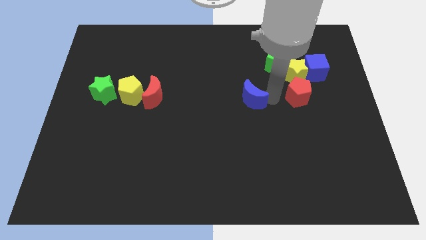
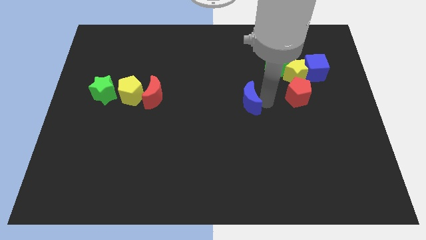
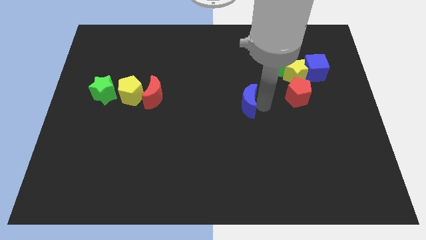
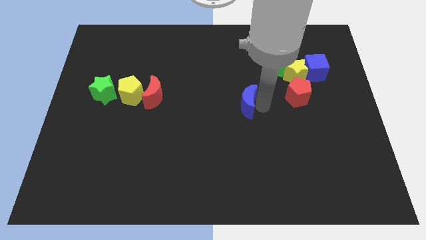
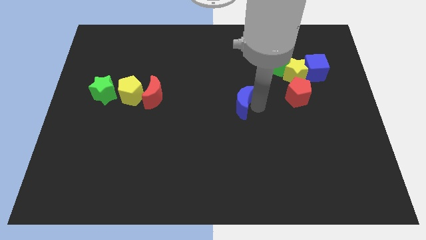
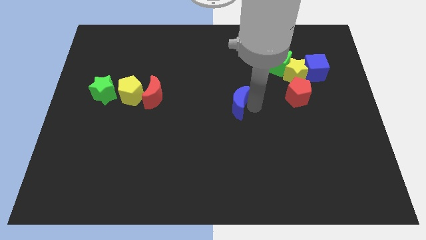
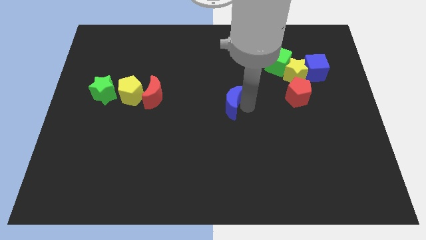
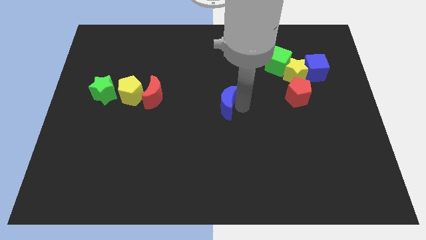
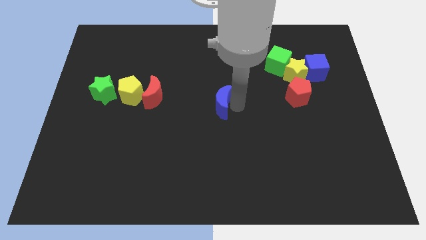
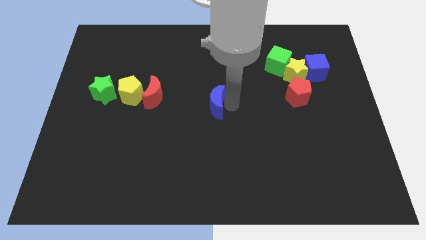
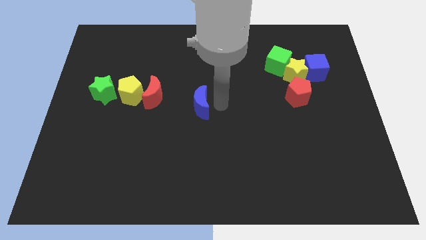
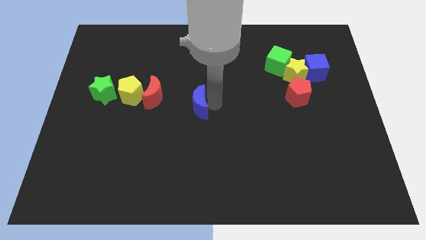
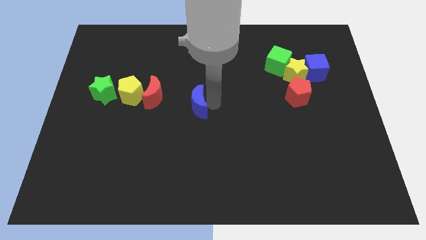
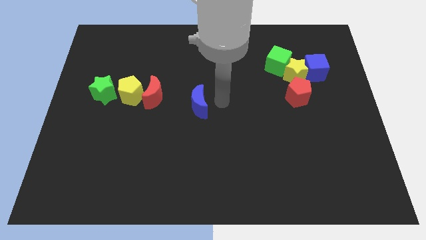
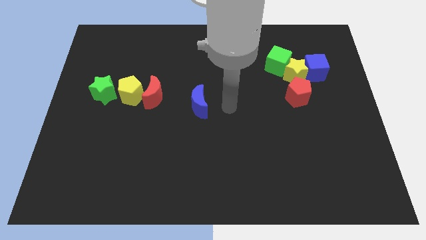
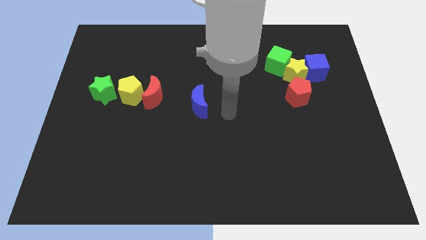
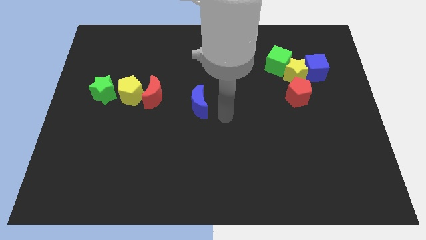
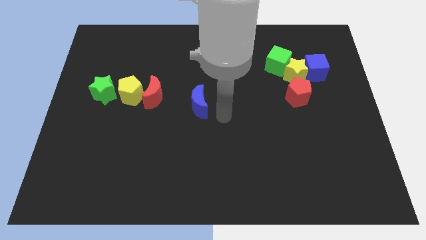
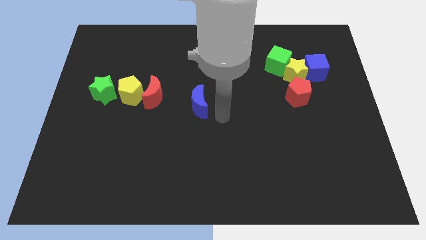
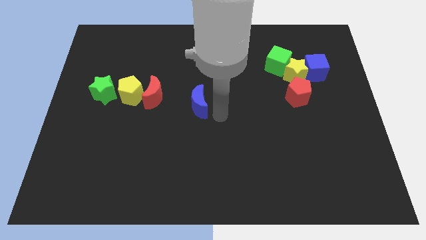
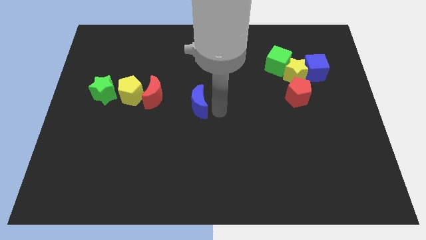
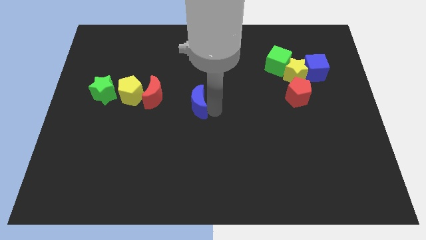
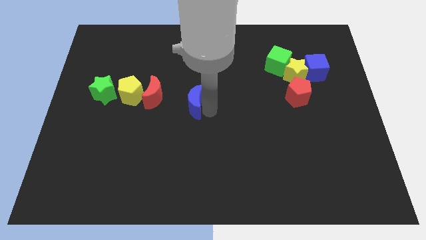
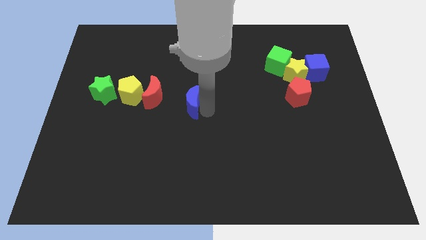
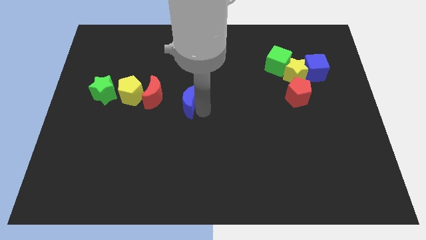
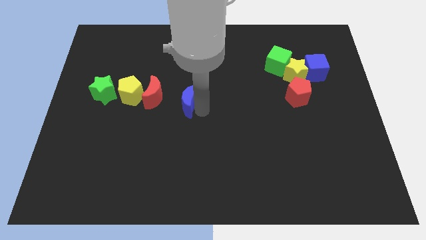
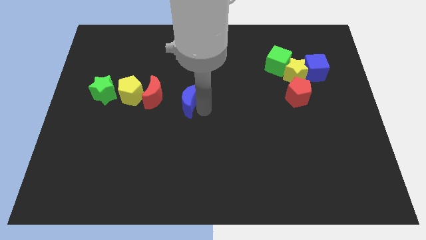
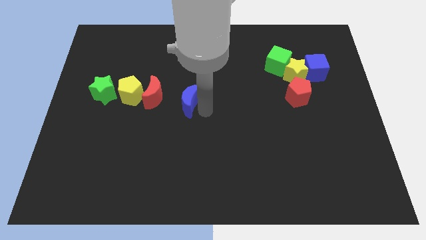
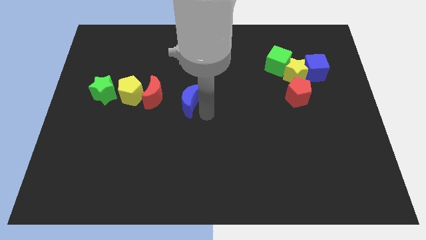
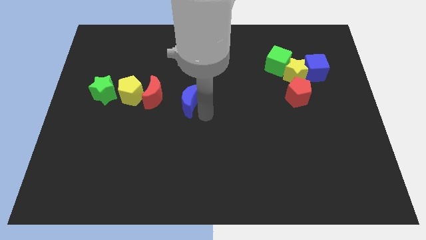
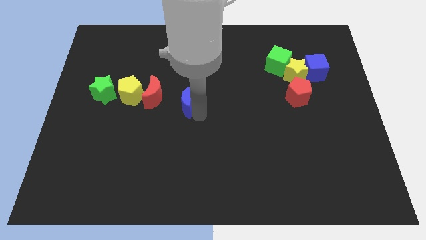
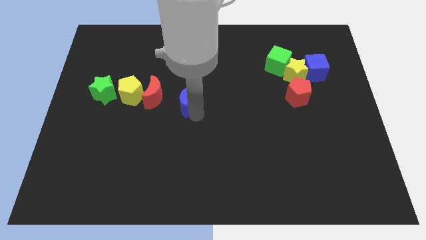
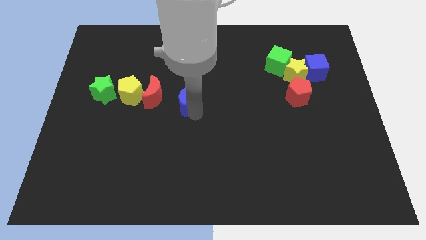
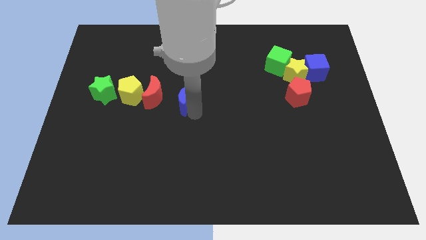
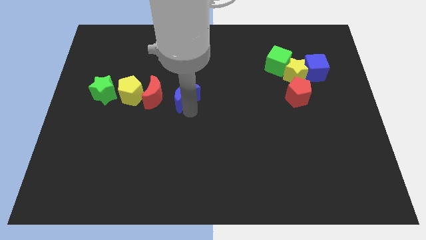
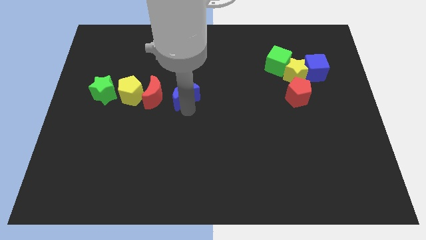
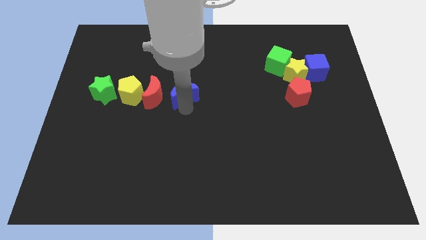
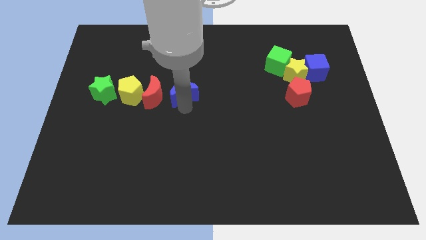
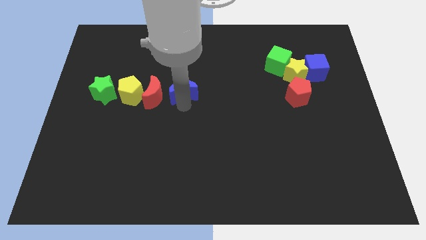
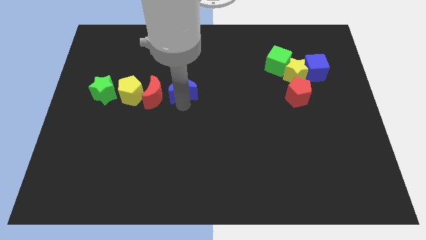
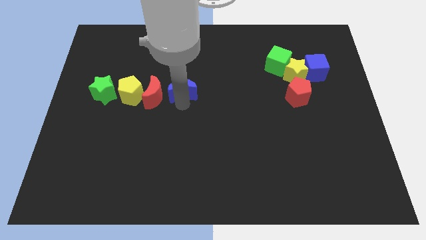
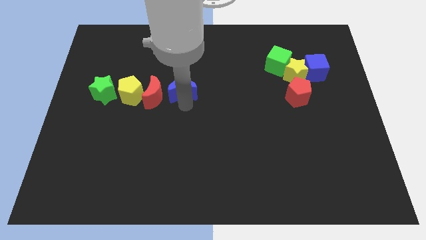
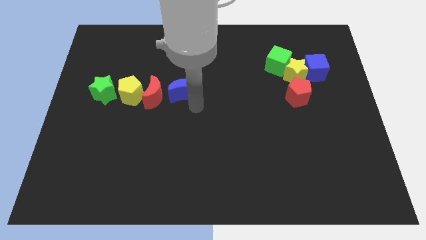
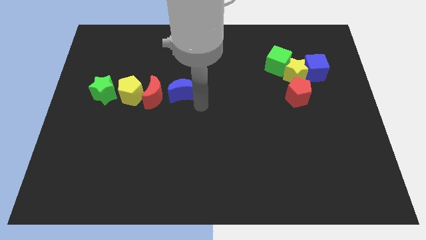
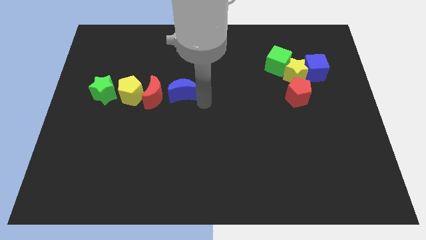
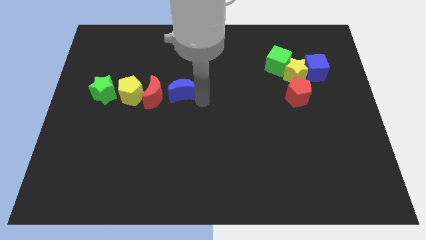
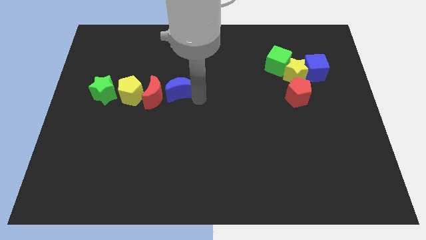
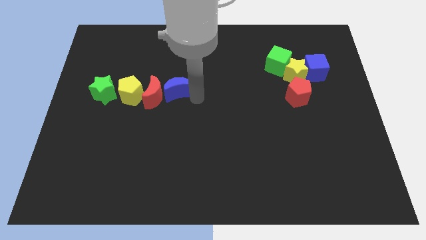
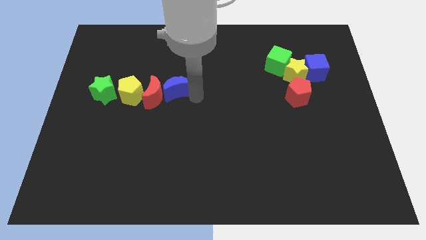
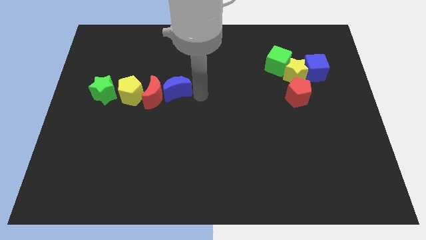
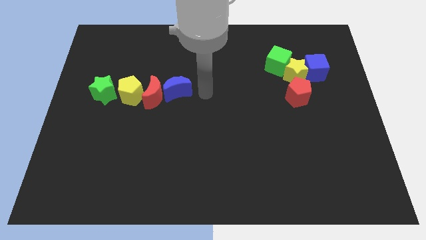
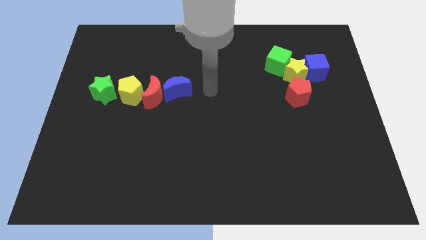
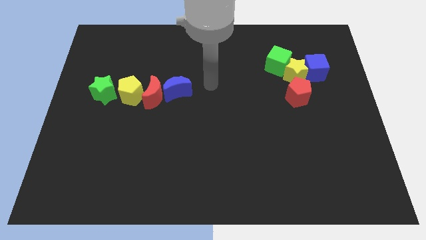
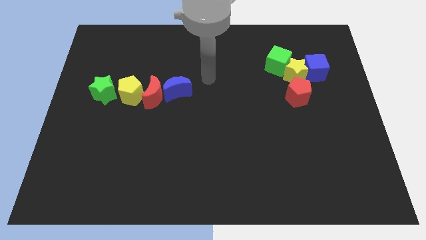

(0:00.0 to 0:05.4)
place the blue moon to the top right of the red crescent

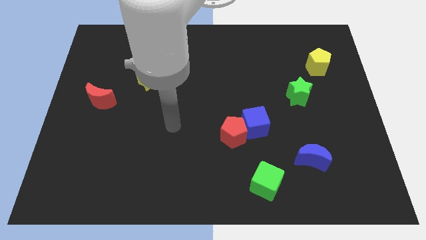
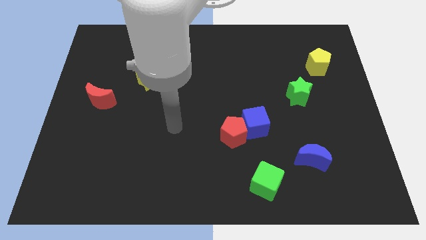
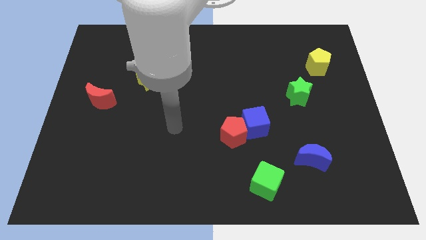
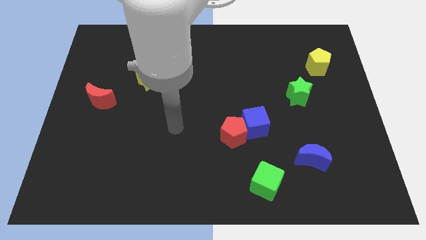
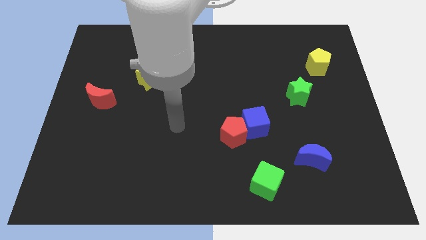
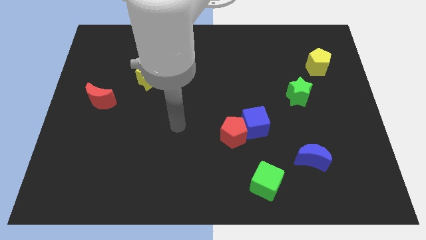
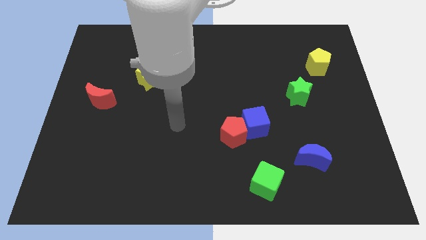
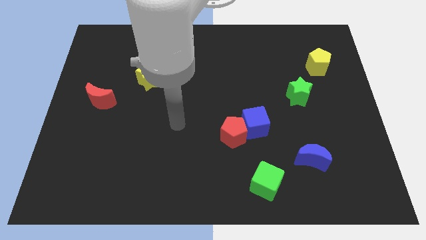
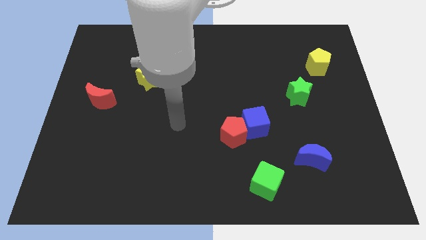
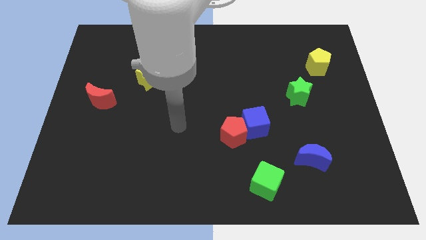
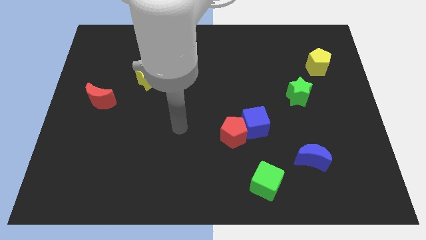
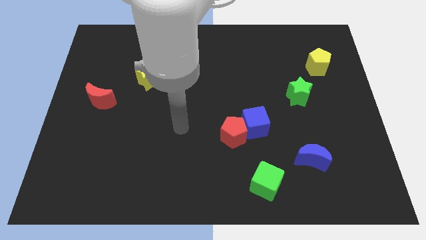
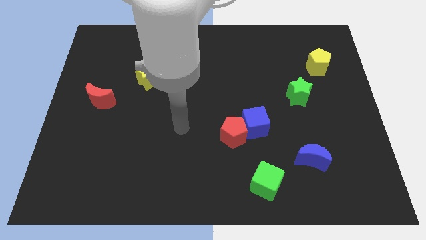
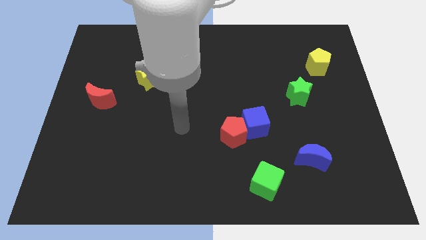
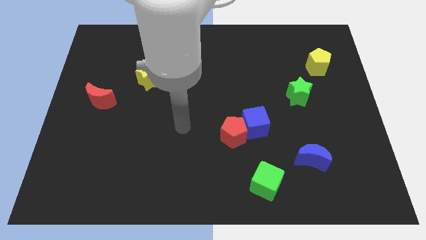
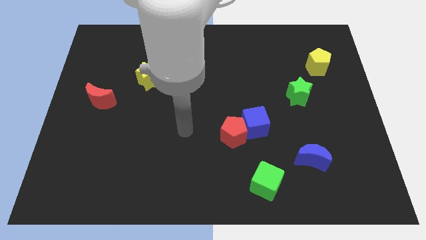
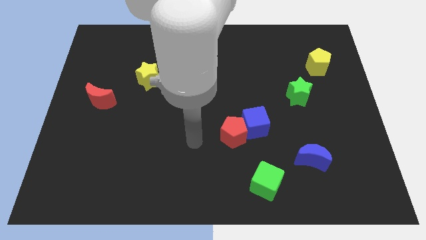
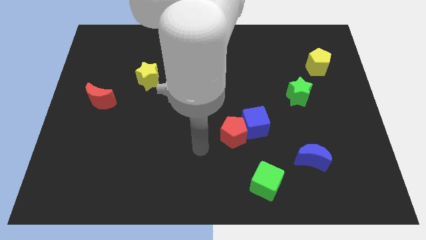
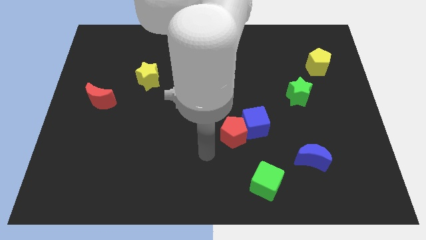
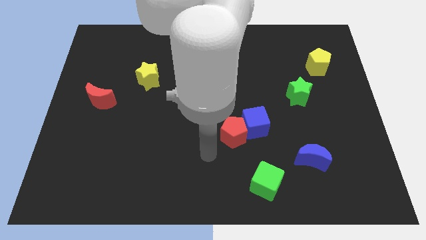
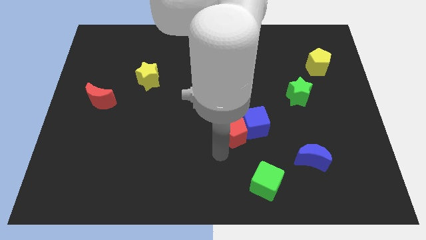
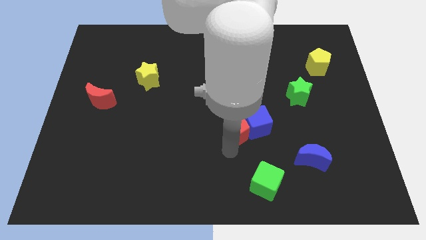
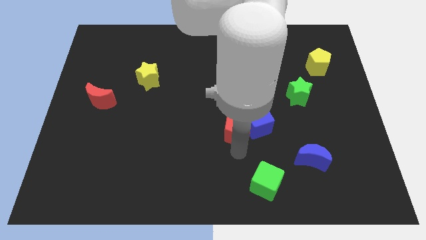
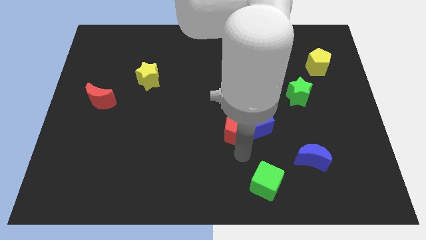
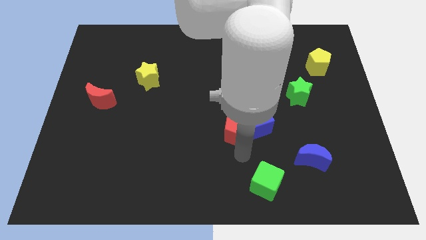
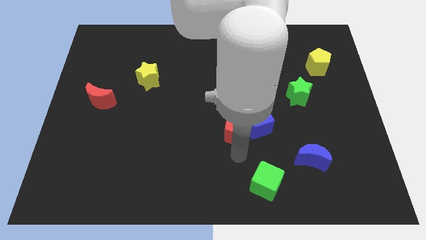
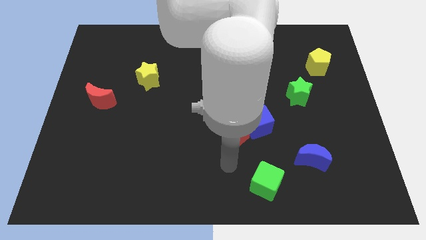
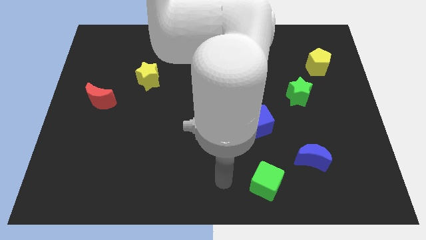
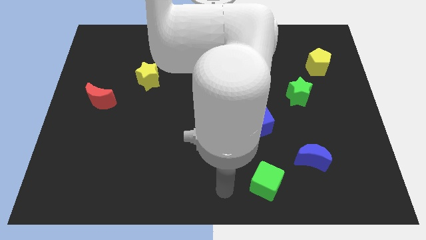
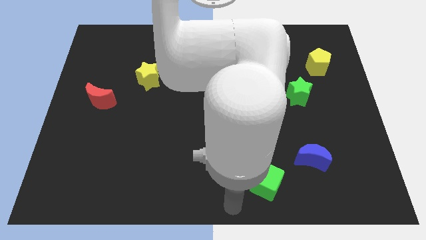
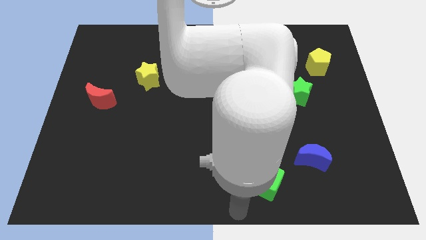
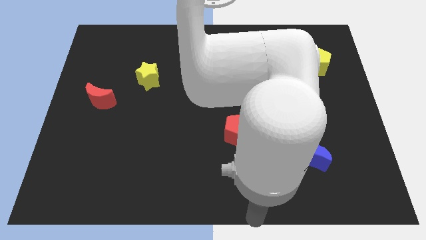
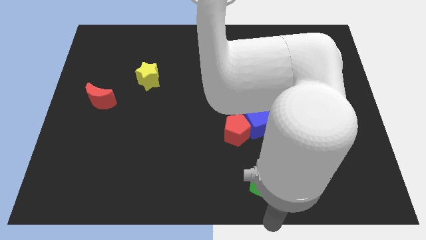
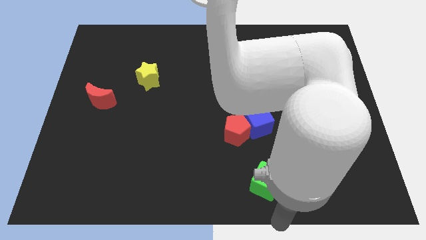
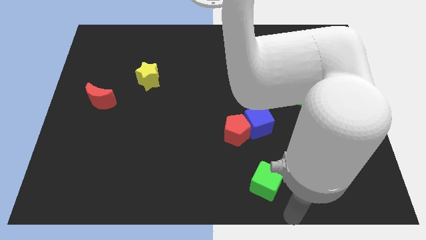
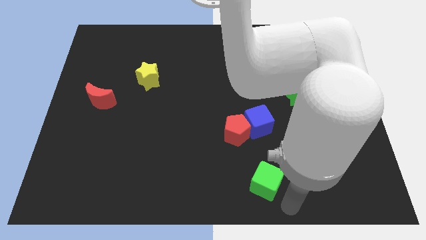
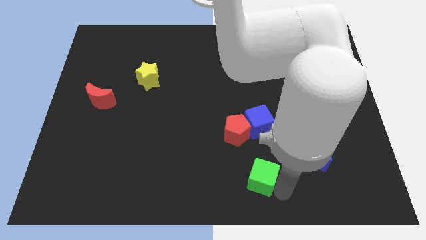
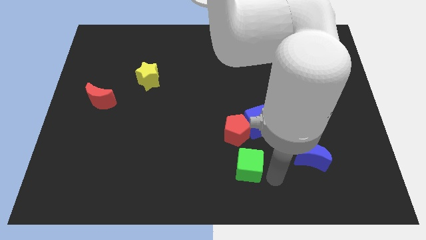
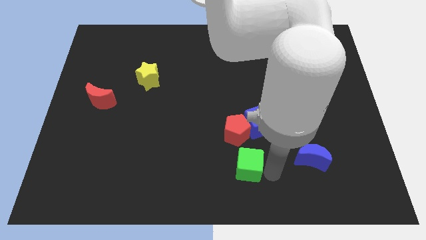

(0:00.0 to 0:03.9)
move the green cube at the right bottom side of the red pentagon

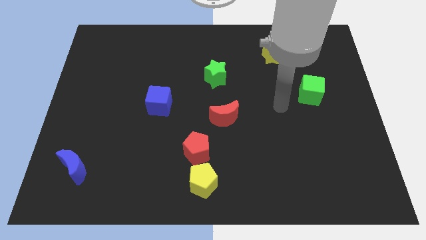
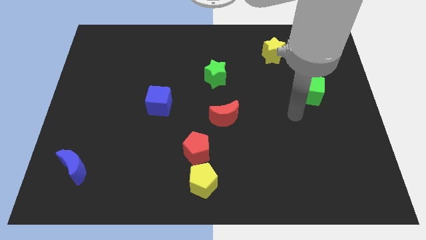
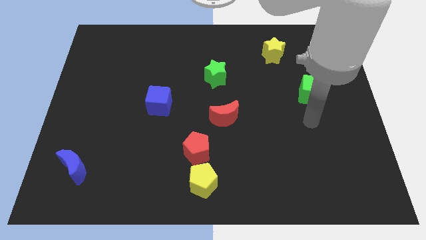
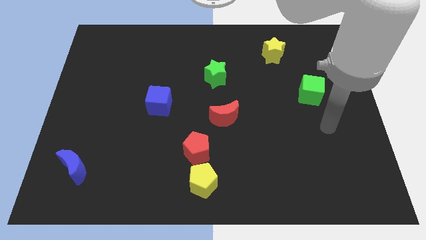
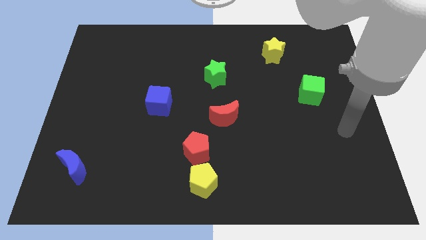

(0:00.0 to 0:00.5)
move your arm to the right center of the board
